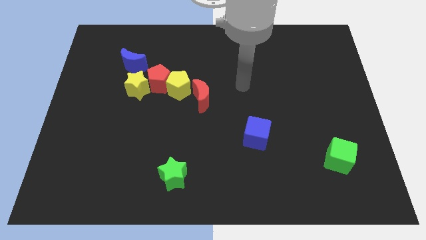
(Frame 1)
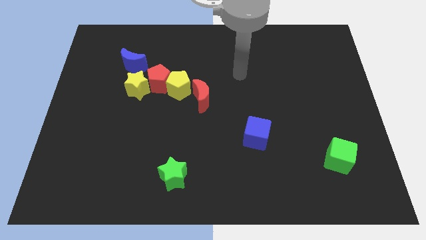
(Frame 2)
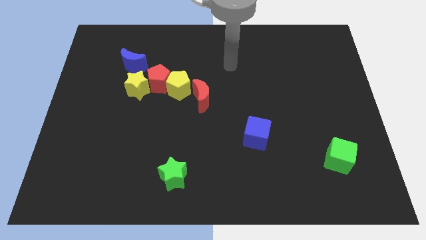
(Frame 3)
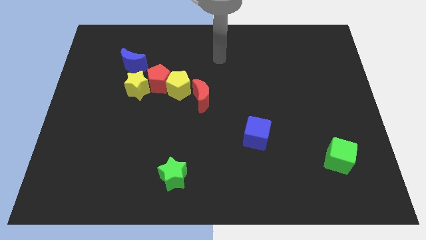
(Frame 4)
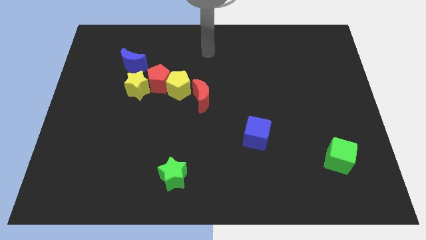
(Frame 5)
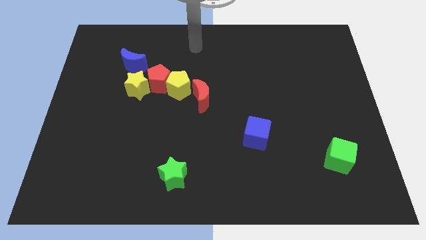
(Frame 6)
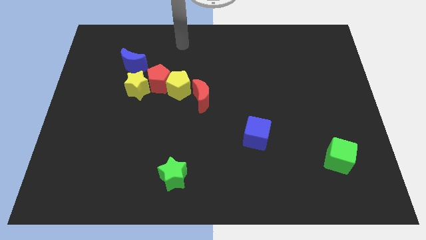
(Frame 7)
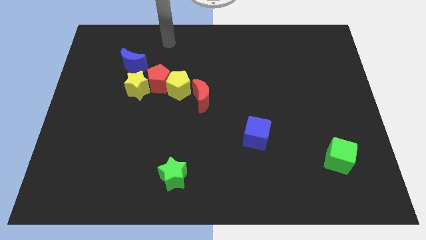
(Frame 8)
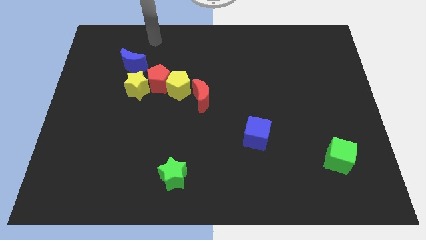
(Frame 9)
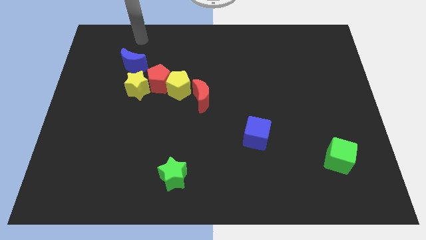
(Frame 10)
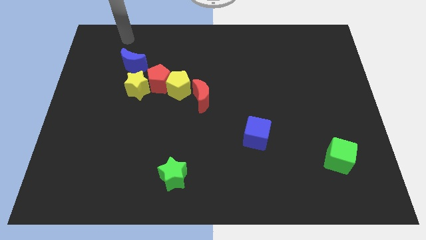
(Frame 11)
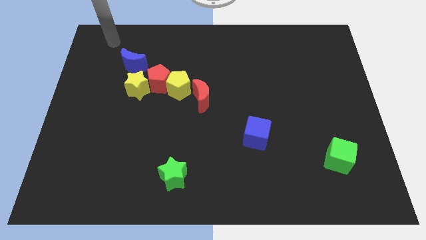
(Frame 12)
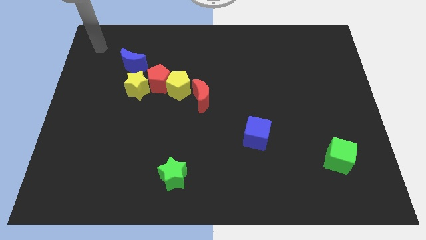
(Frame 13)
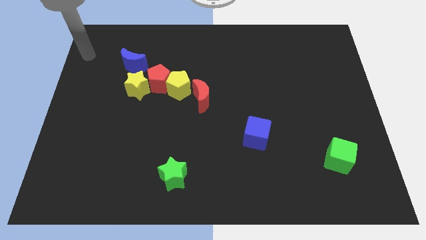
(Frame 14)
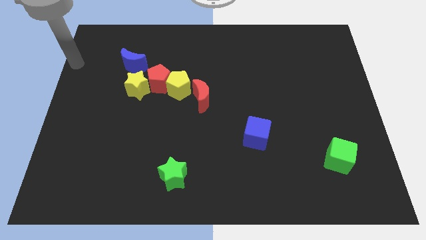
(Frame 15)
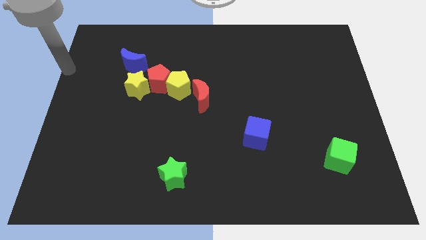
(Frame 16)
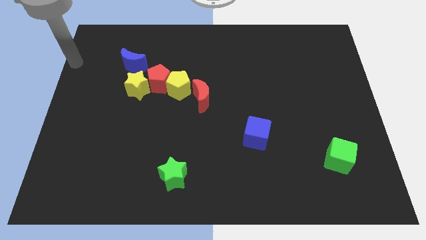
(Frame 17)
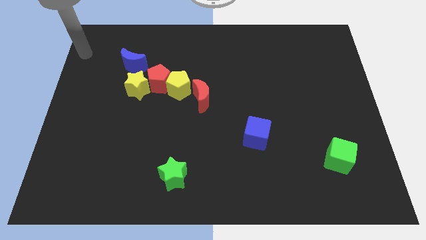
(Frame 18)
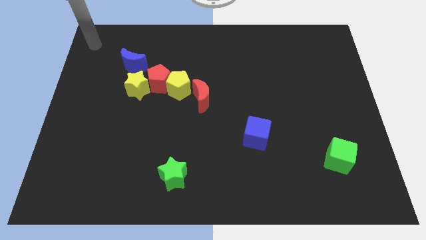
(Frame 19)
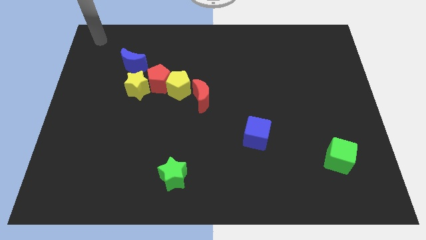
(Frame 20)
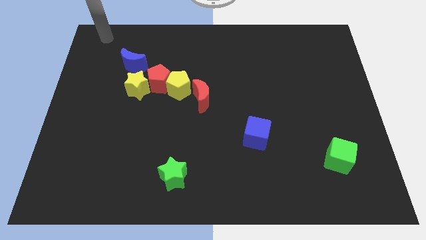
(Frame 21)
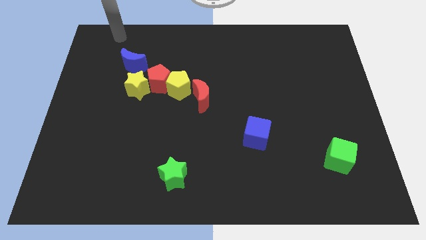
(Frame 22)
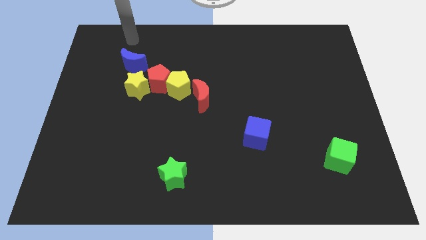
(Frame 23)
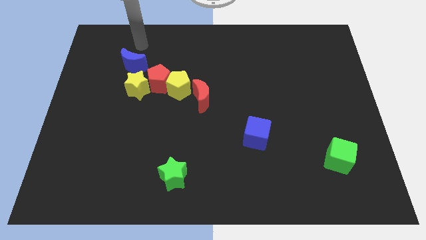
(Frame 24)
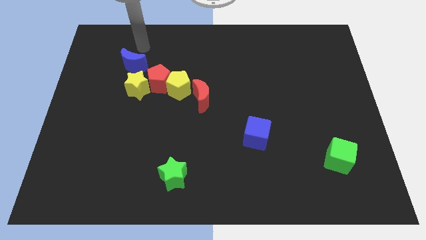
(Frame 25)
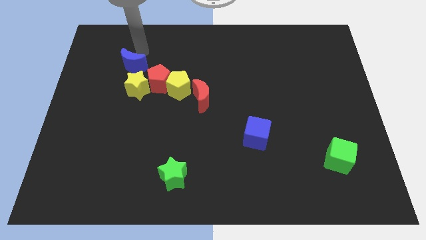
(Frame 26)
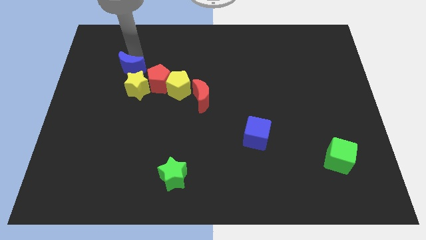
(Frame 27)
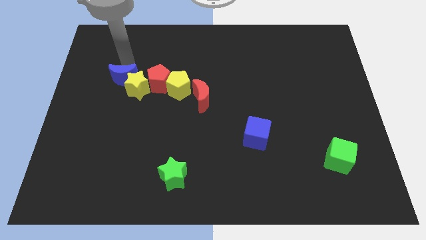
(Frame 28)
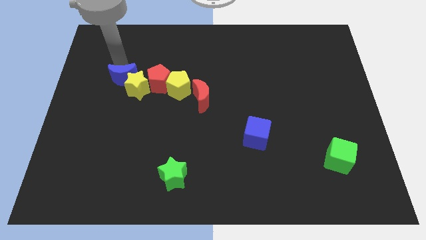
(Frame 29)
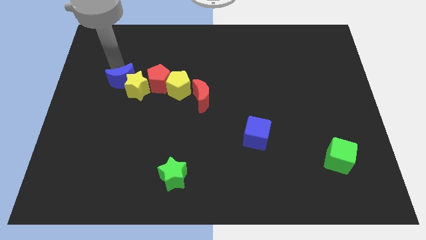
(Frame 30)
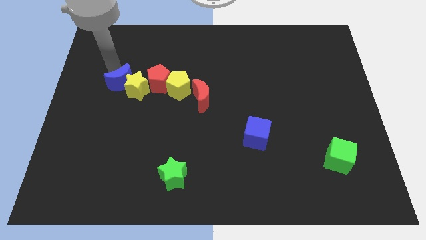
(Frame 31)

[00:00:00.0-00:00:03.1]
put the blue moon into the yellow star

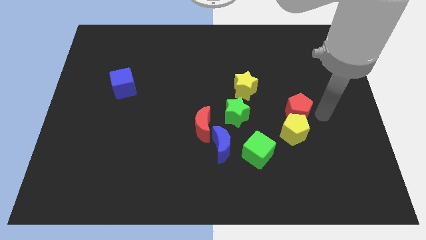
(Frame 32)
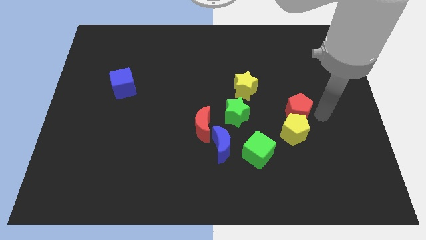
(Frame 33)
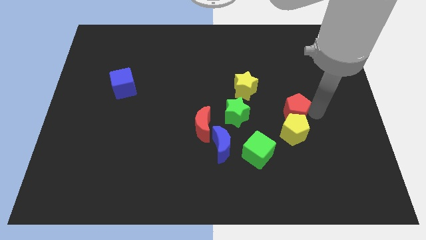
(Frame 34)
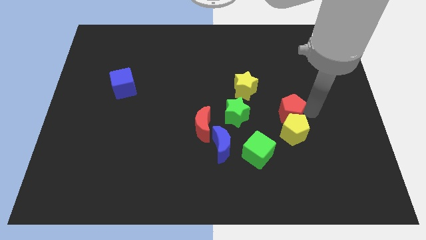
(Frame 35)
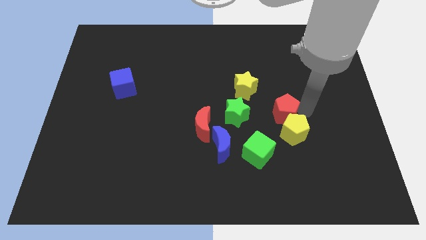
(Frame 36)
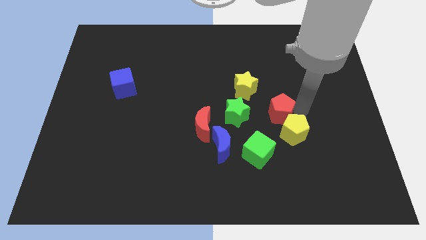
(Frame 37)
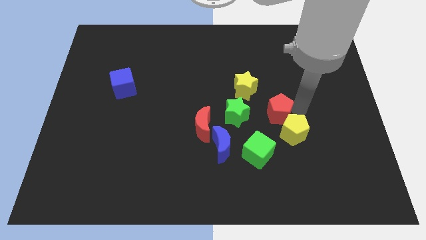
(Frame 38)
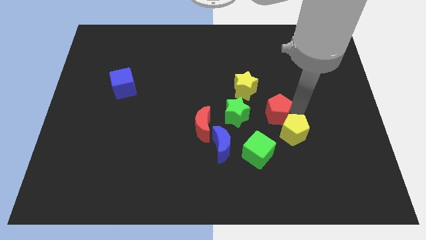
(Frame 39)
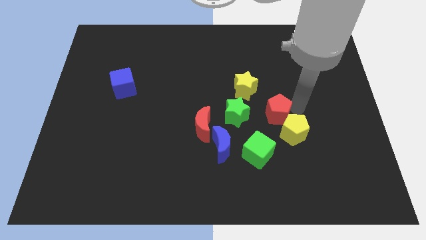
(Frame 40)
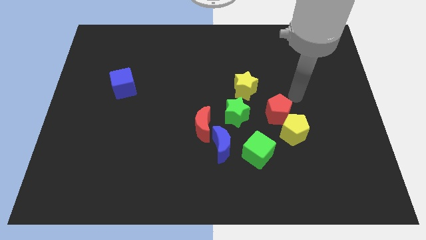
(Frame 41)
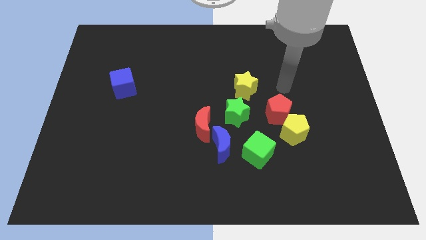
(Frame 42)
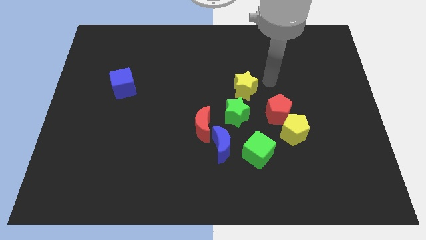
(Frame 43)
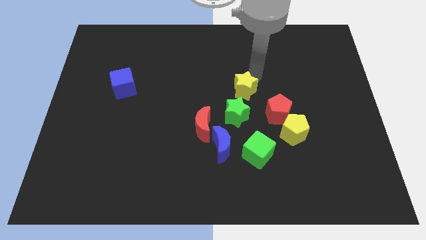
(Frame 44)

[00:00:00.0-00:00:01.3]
push the red pentagon slightly to the left

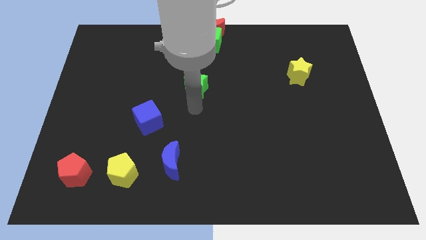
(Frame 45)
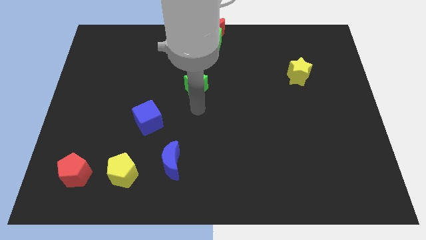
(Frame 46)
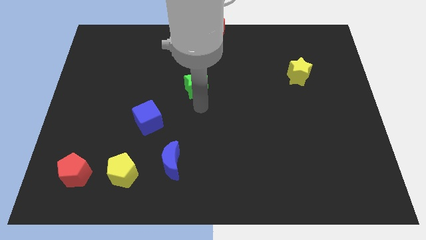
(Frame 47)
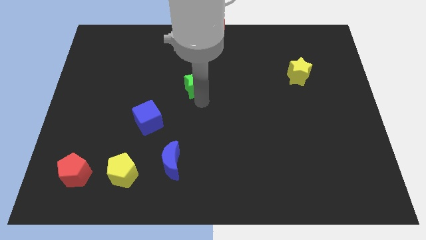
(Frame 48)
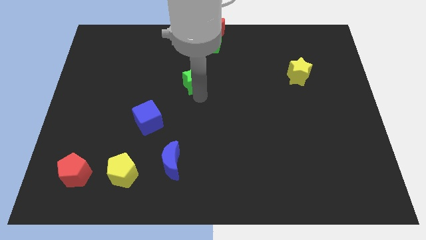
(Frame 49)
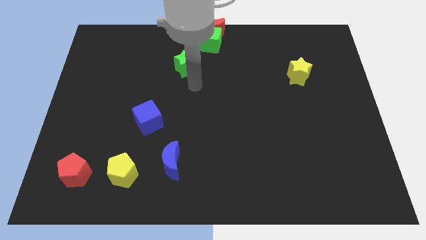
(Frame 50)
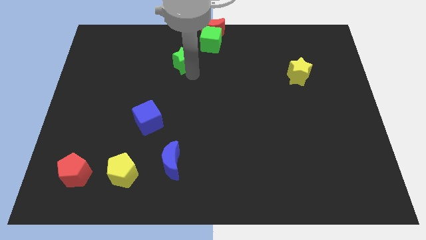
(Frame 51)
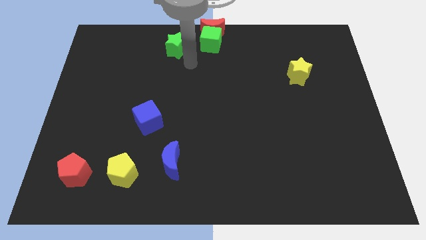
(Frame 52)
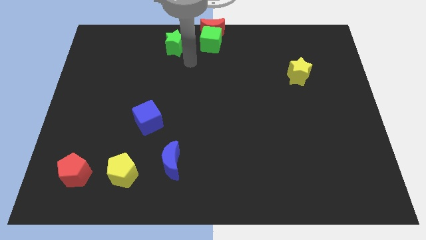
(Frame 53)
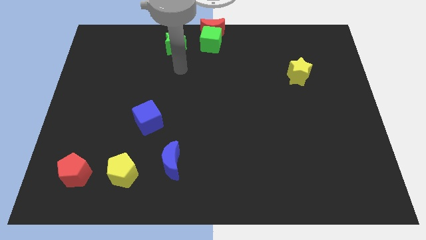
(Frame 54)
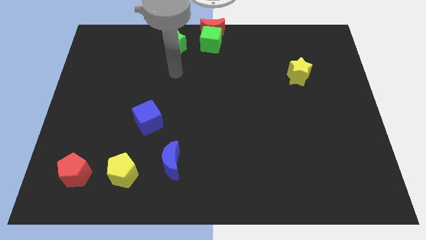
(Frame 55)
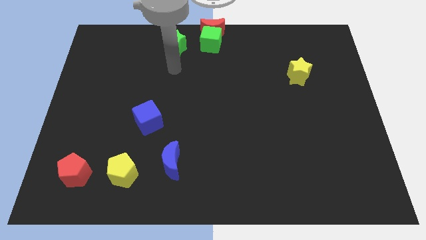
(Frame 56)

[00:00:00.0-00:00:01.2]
move the green star to the left side of the green cube

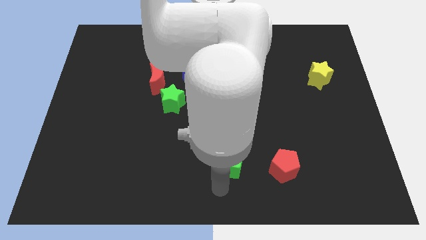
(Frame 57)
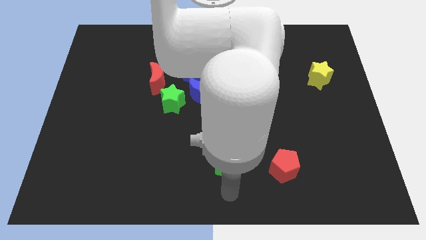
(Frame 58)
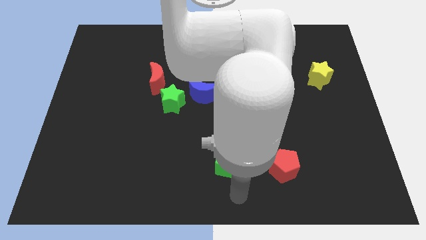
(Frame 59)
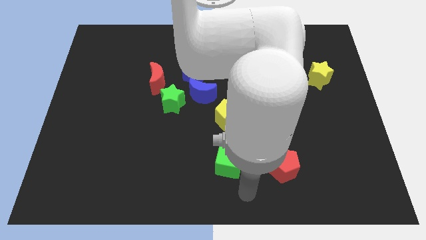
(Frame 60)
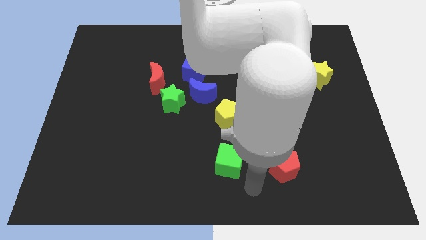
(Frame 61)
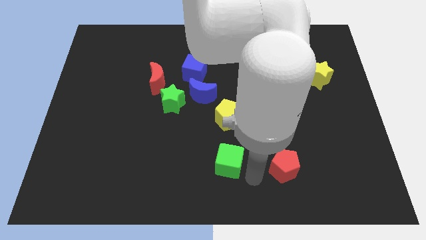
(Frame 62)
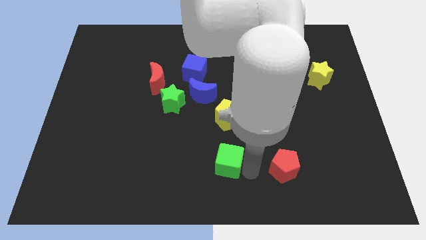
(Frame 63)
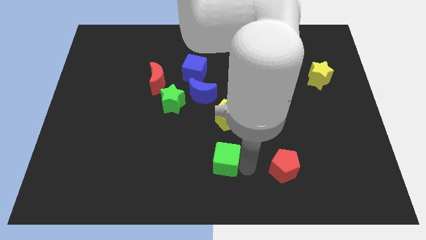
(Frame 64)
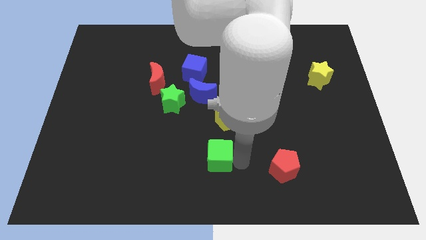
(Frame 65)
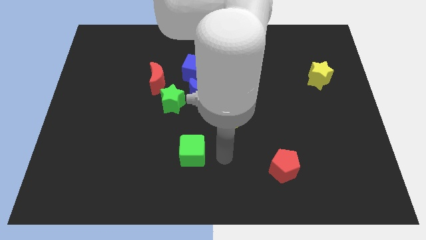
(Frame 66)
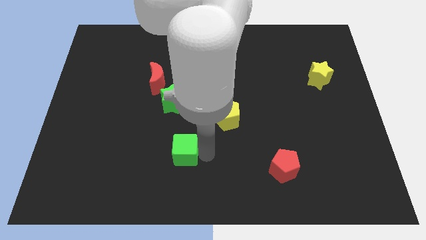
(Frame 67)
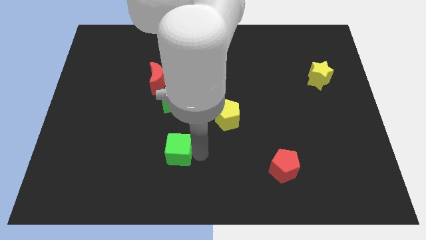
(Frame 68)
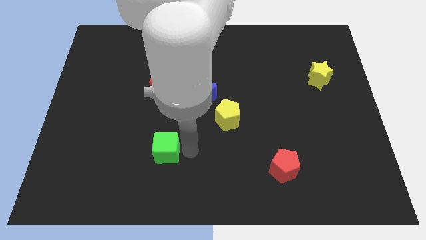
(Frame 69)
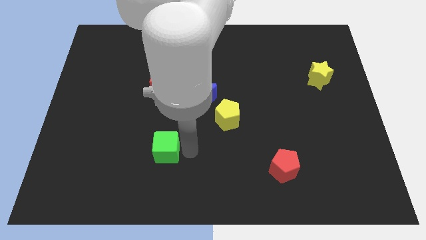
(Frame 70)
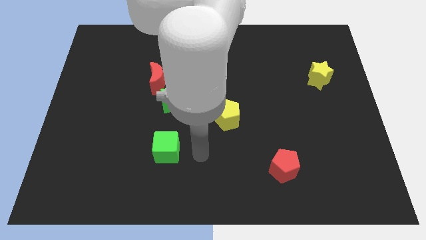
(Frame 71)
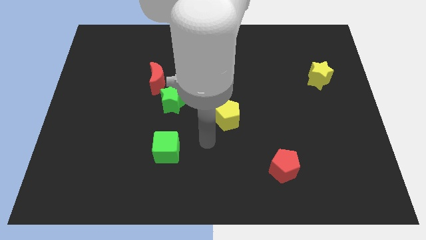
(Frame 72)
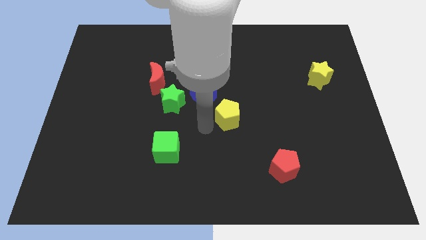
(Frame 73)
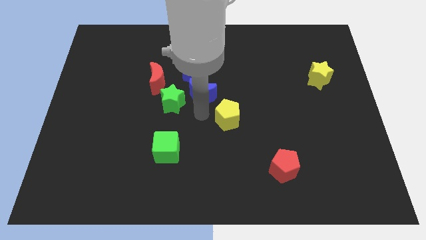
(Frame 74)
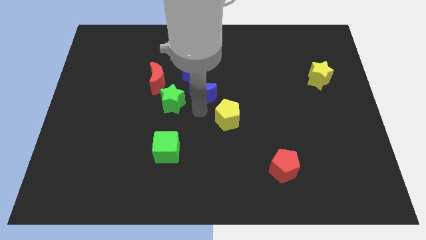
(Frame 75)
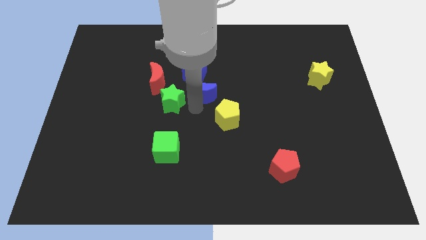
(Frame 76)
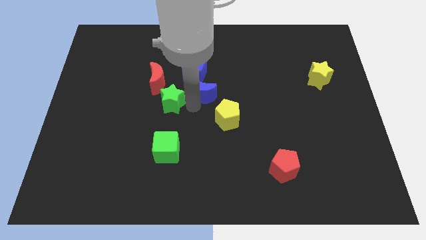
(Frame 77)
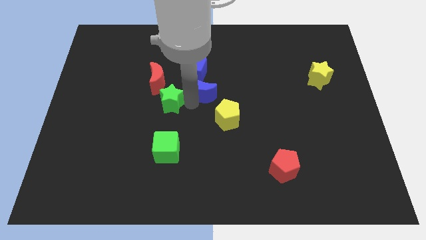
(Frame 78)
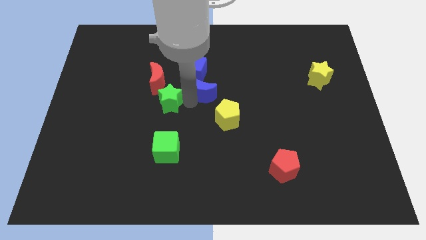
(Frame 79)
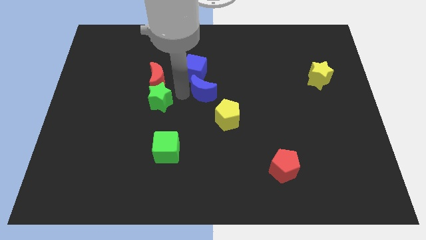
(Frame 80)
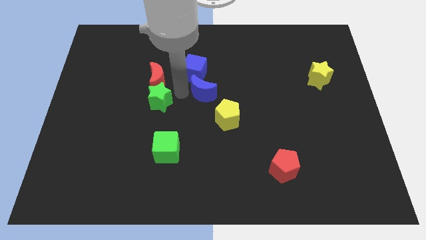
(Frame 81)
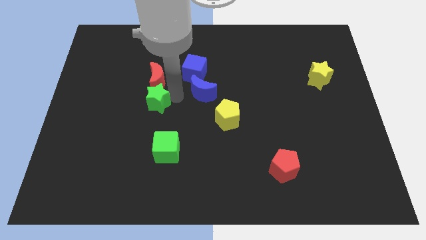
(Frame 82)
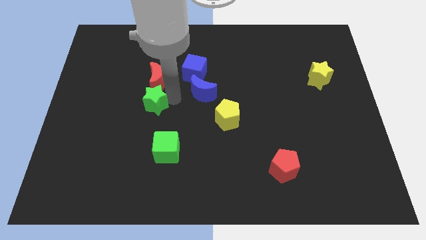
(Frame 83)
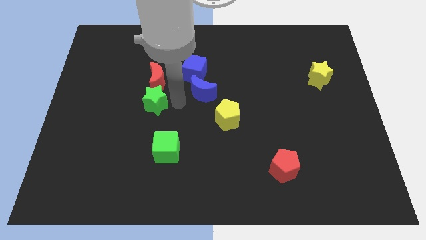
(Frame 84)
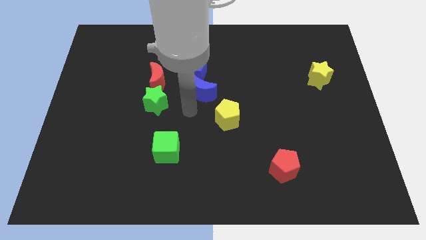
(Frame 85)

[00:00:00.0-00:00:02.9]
move the green cube to the left and green star below red moon

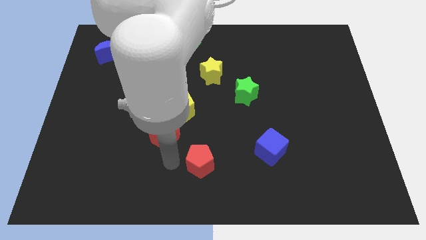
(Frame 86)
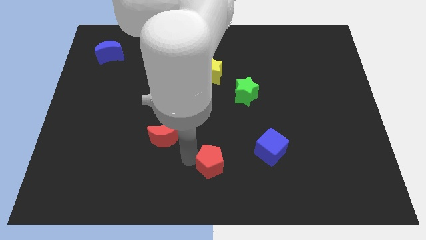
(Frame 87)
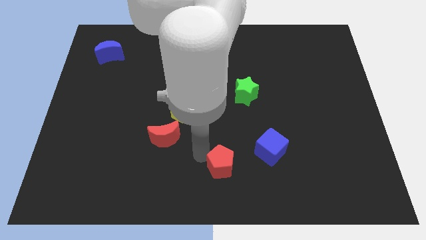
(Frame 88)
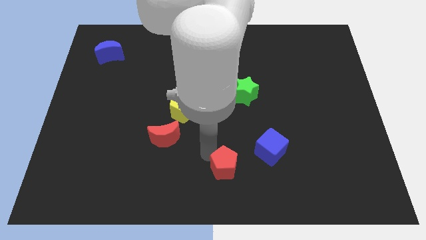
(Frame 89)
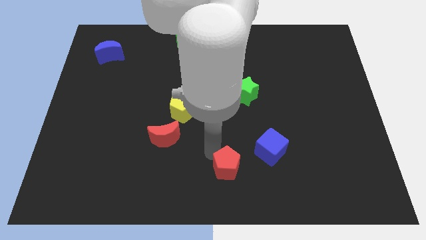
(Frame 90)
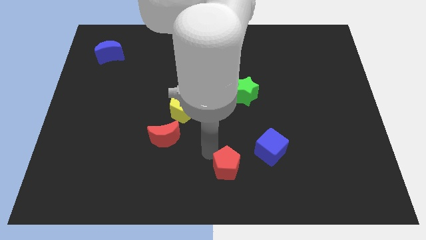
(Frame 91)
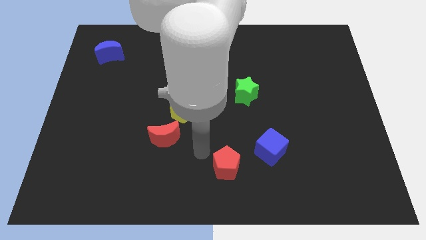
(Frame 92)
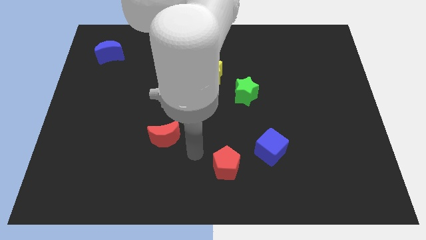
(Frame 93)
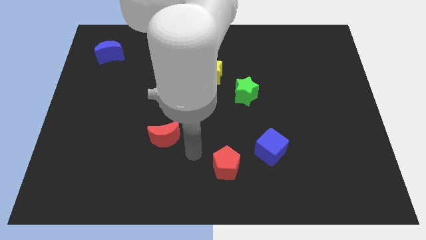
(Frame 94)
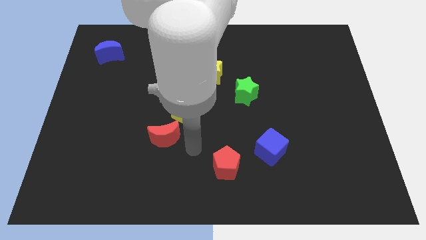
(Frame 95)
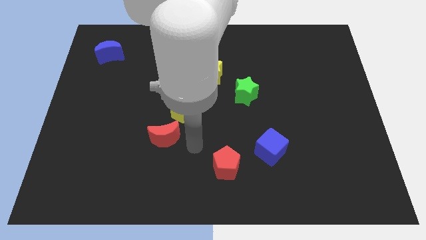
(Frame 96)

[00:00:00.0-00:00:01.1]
push red pentagon towards blue cube
